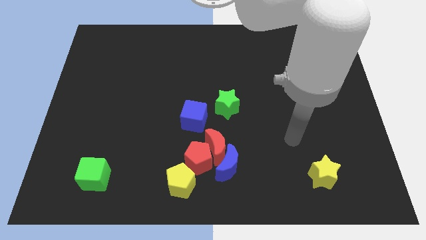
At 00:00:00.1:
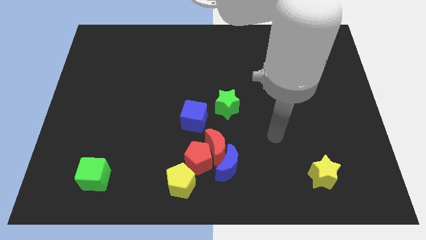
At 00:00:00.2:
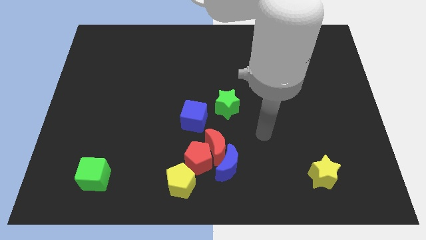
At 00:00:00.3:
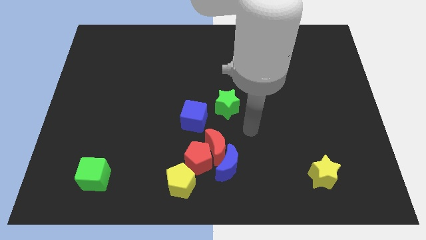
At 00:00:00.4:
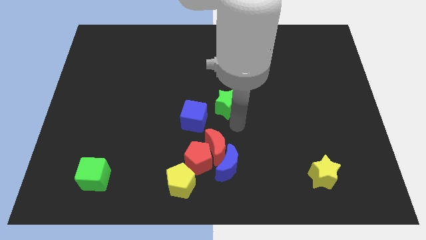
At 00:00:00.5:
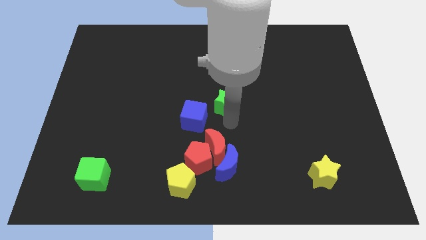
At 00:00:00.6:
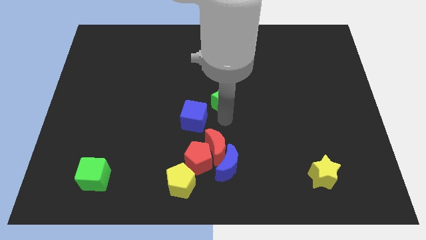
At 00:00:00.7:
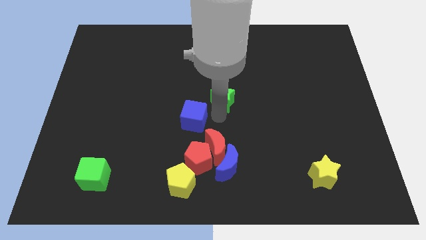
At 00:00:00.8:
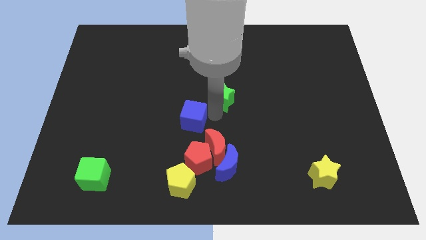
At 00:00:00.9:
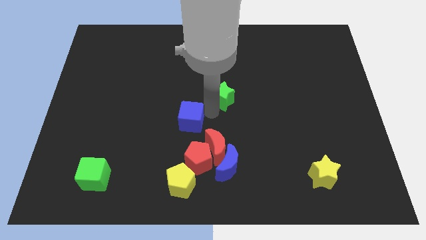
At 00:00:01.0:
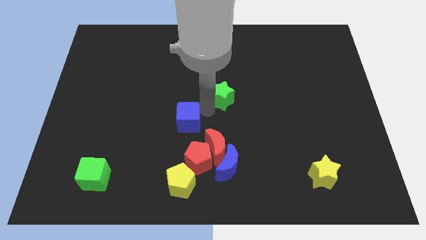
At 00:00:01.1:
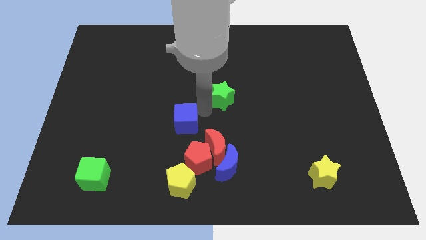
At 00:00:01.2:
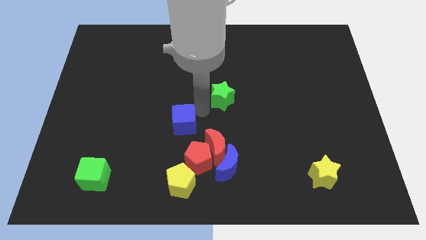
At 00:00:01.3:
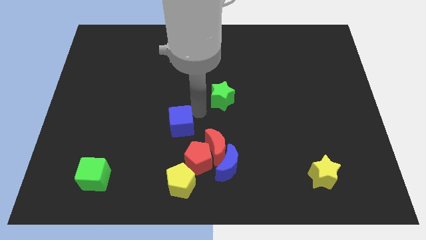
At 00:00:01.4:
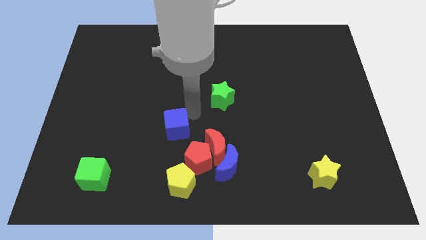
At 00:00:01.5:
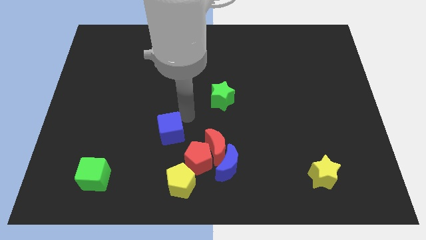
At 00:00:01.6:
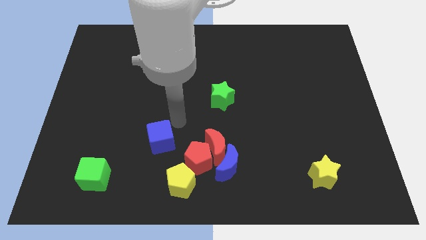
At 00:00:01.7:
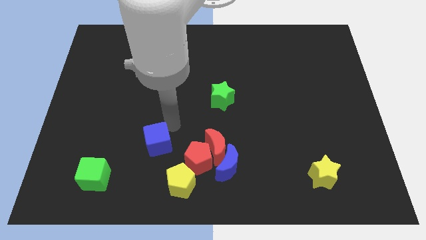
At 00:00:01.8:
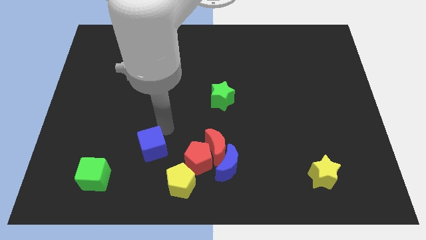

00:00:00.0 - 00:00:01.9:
push the blue cube slightly to the bottom

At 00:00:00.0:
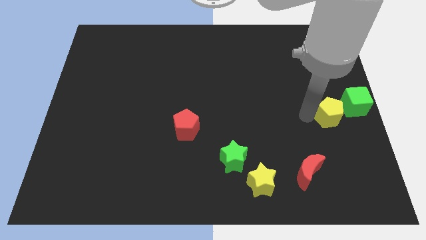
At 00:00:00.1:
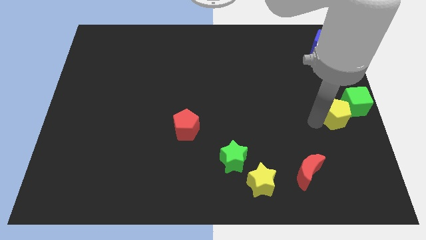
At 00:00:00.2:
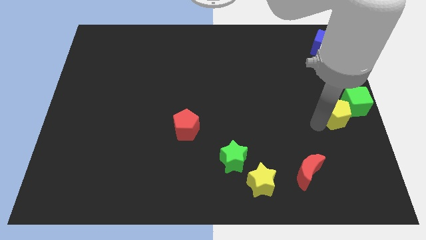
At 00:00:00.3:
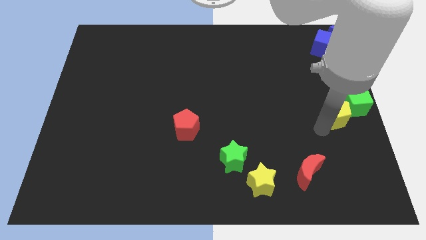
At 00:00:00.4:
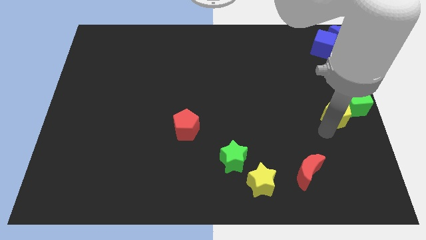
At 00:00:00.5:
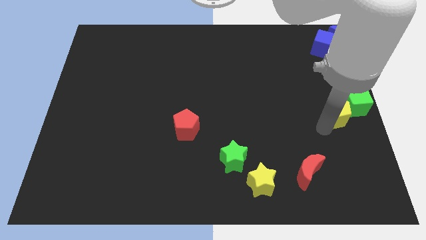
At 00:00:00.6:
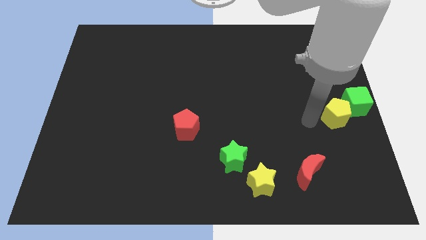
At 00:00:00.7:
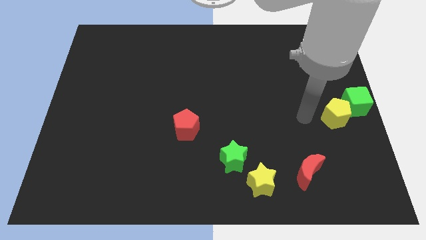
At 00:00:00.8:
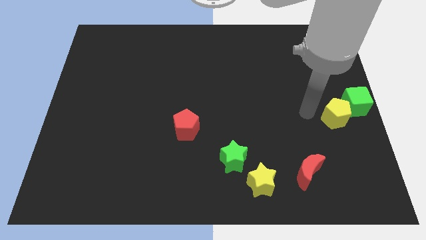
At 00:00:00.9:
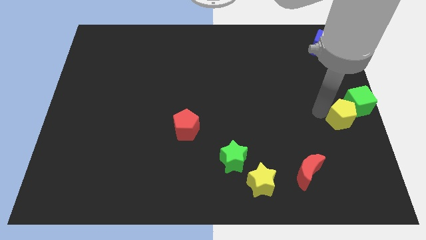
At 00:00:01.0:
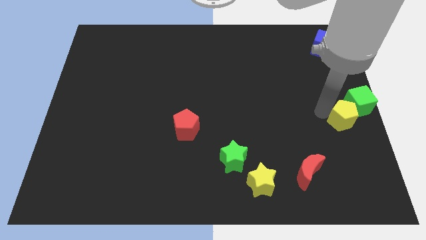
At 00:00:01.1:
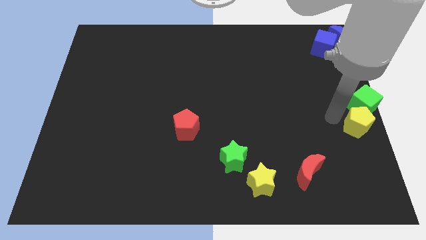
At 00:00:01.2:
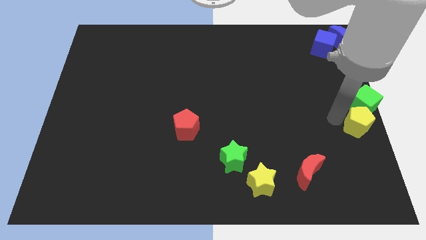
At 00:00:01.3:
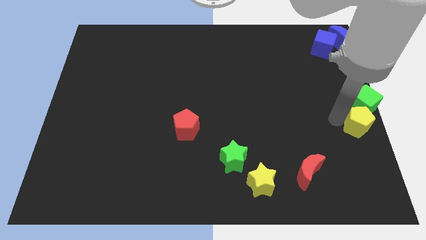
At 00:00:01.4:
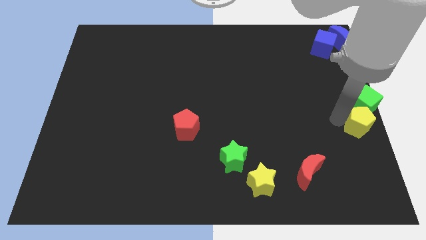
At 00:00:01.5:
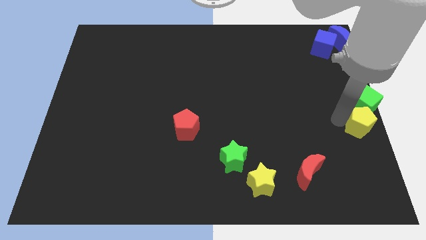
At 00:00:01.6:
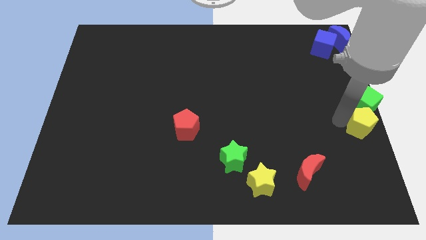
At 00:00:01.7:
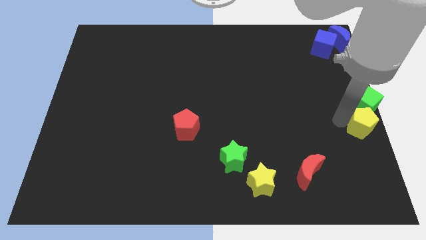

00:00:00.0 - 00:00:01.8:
put the yellow pentagon into the green cube

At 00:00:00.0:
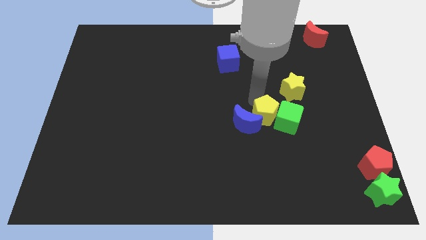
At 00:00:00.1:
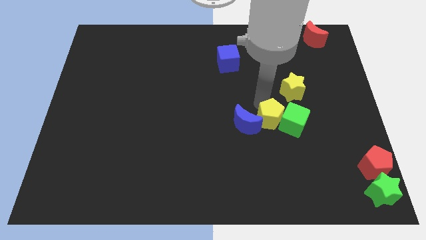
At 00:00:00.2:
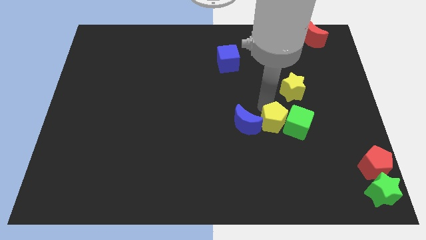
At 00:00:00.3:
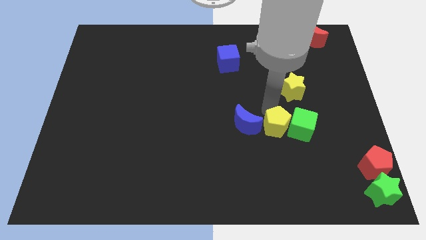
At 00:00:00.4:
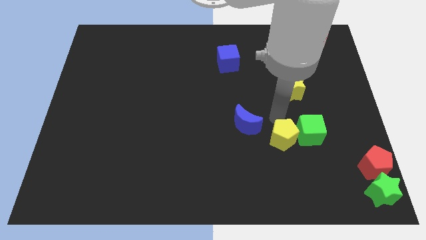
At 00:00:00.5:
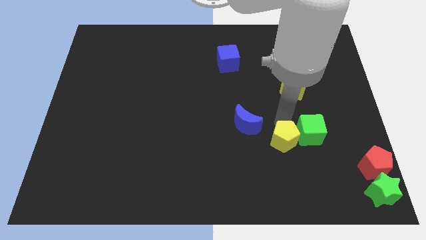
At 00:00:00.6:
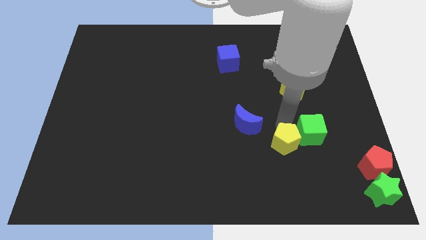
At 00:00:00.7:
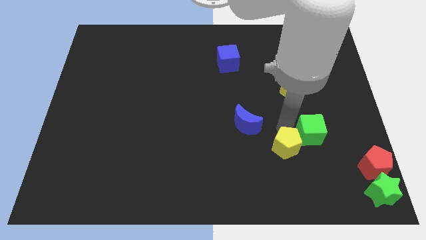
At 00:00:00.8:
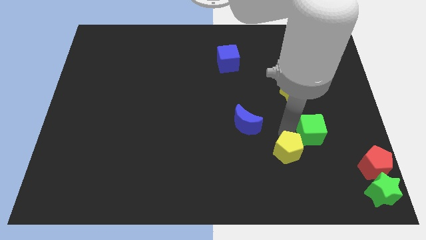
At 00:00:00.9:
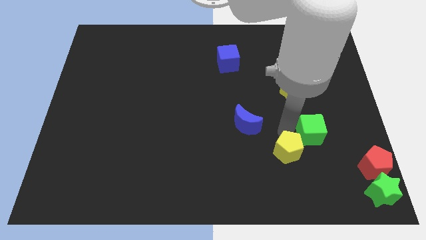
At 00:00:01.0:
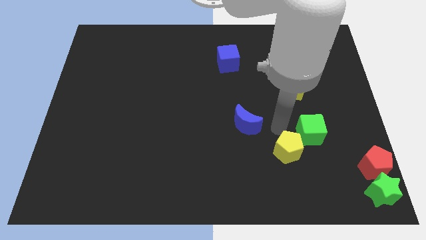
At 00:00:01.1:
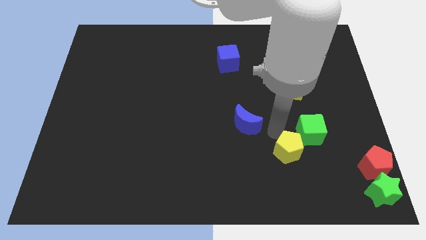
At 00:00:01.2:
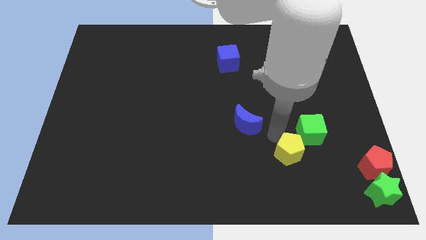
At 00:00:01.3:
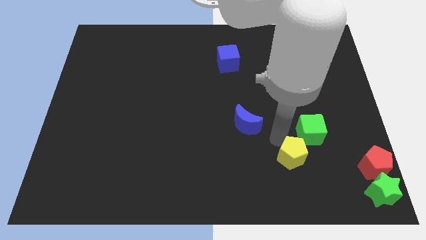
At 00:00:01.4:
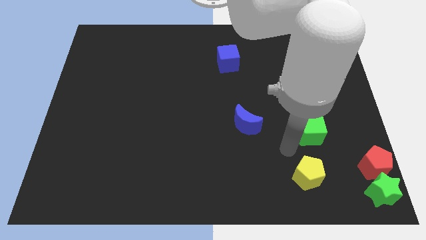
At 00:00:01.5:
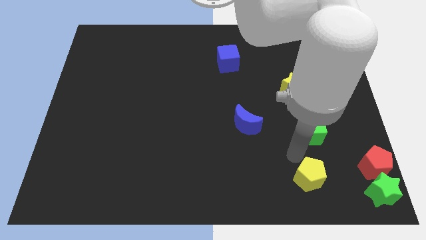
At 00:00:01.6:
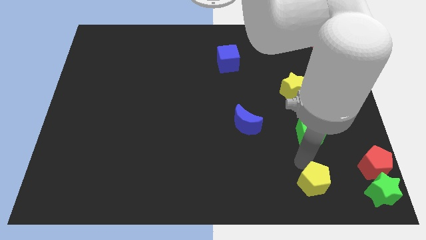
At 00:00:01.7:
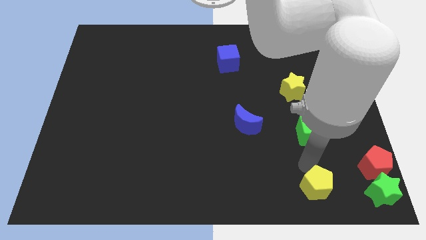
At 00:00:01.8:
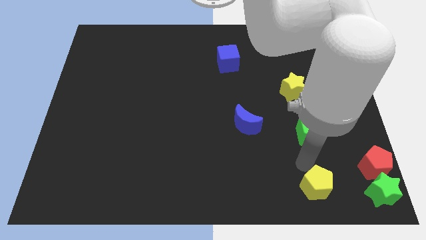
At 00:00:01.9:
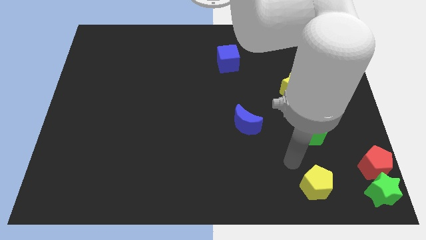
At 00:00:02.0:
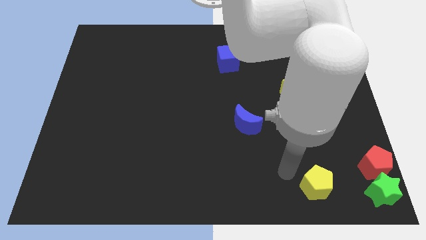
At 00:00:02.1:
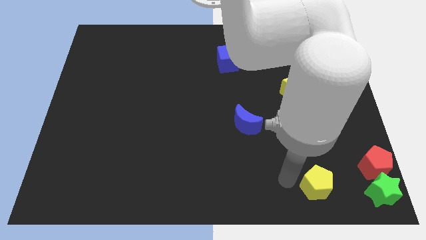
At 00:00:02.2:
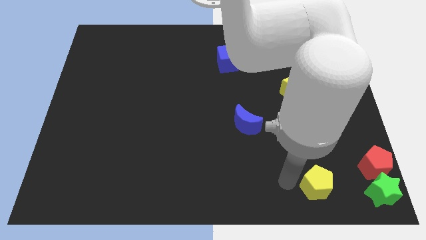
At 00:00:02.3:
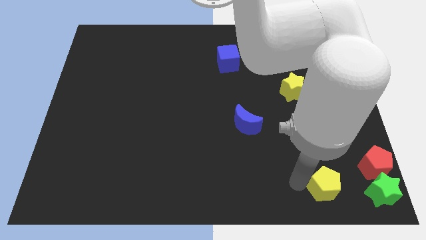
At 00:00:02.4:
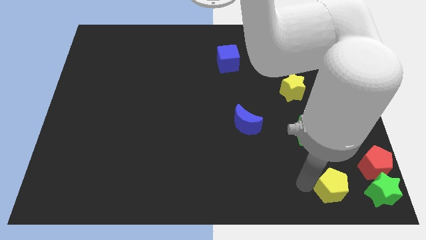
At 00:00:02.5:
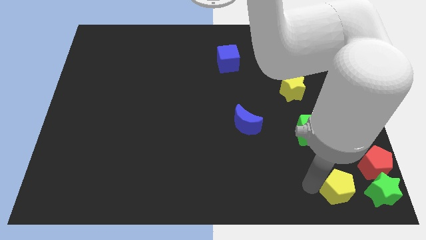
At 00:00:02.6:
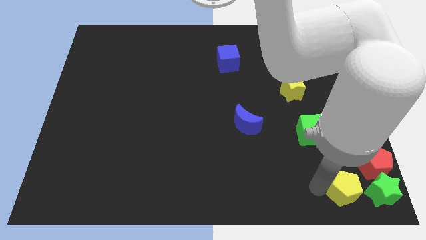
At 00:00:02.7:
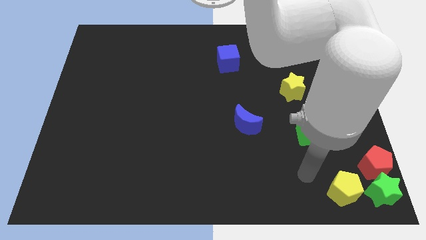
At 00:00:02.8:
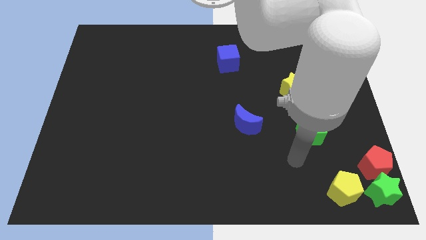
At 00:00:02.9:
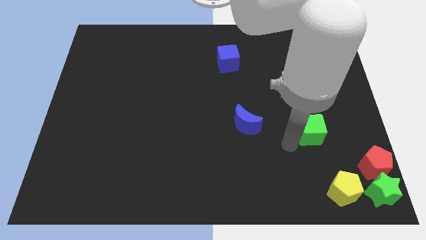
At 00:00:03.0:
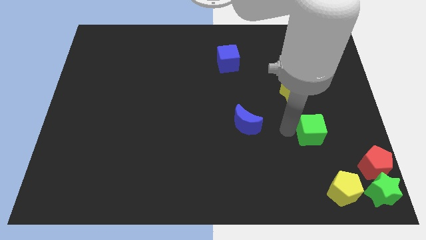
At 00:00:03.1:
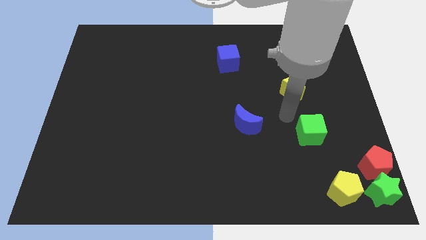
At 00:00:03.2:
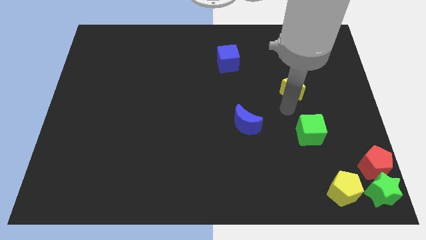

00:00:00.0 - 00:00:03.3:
push the yellow pentagon to the left of the green star

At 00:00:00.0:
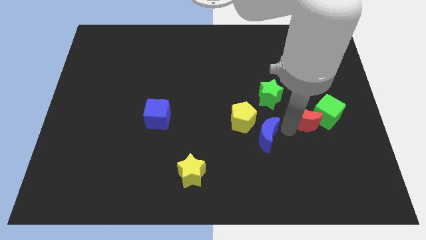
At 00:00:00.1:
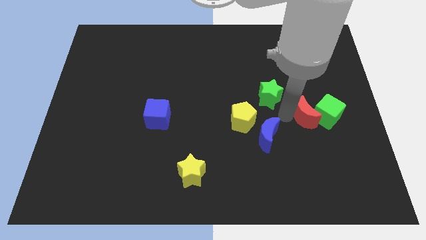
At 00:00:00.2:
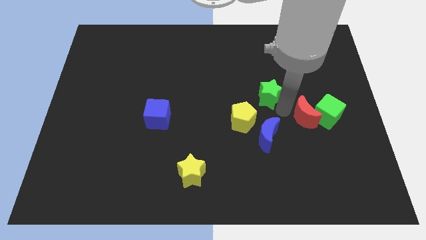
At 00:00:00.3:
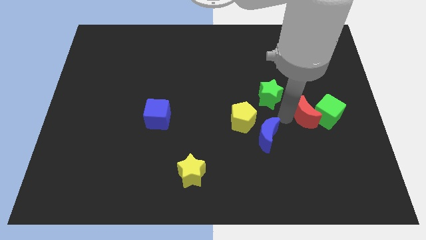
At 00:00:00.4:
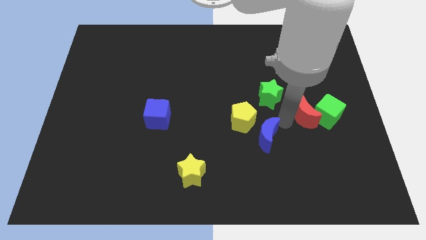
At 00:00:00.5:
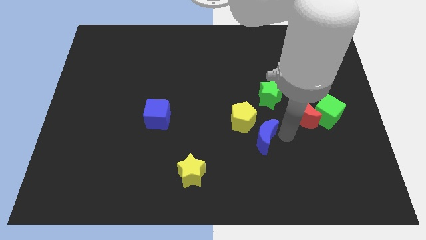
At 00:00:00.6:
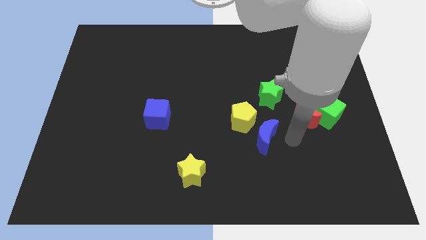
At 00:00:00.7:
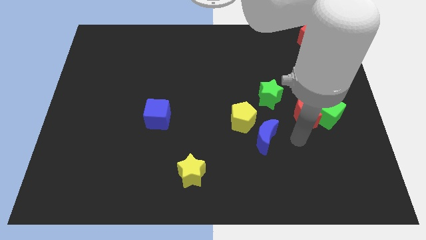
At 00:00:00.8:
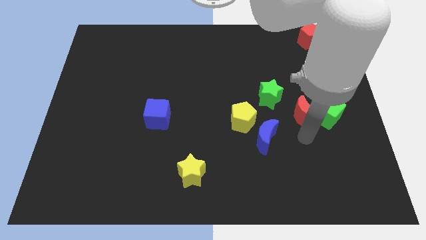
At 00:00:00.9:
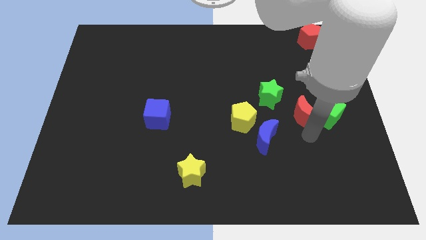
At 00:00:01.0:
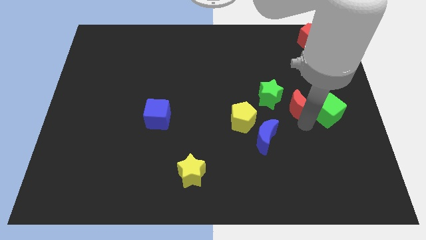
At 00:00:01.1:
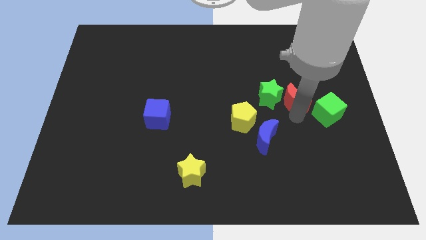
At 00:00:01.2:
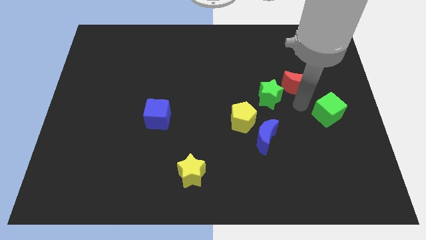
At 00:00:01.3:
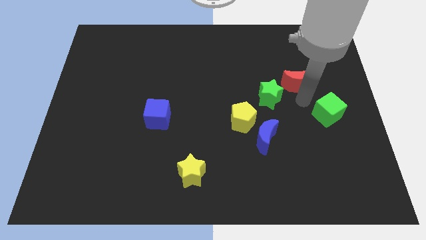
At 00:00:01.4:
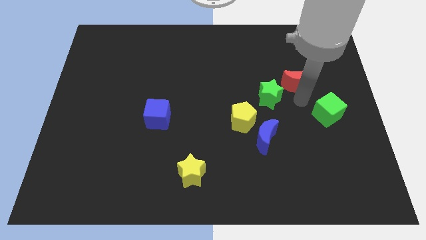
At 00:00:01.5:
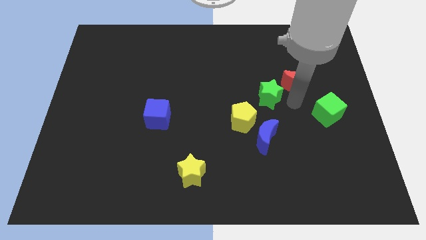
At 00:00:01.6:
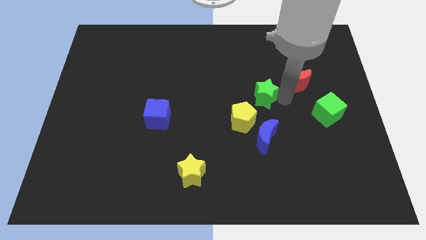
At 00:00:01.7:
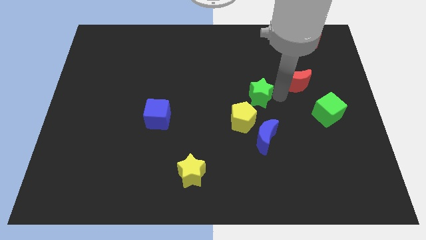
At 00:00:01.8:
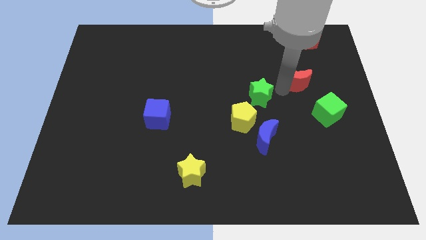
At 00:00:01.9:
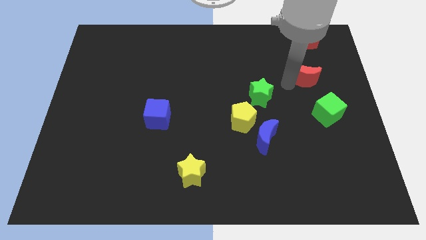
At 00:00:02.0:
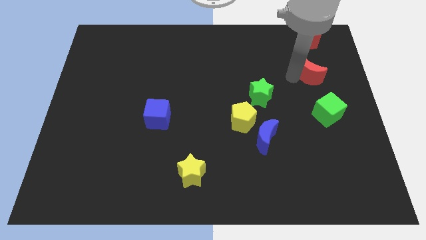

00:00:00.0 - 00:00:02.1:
slide the red moon in upward direction
